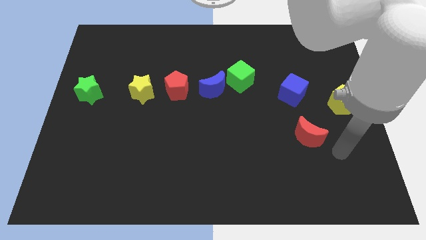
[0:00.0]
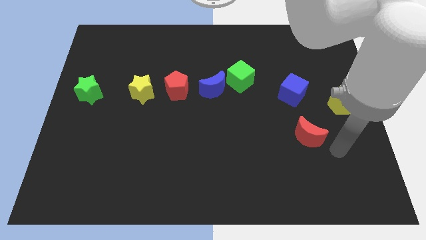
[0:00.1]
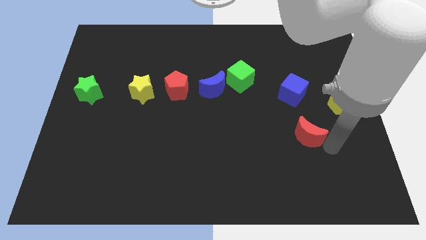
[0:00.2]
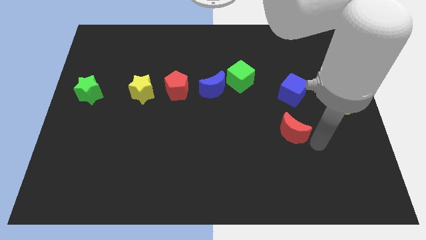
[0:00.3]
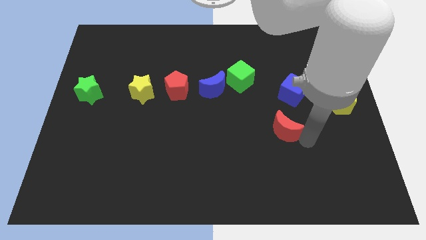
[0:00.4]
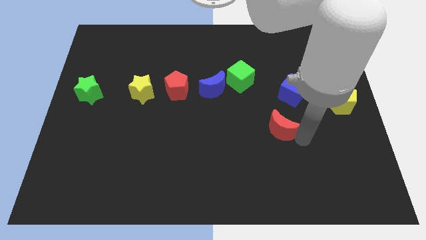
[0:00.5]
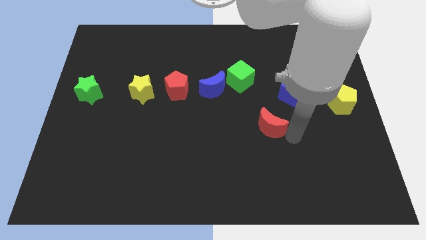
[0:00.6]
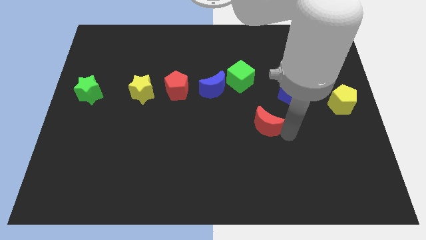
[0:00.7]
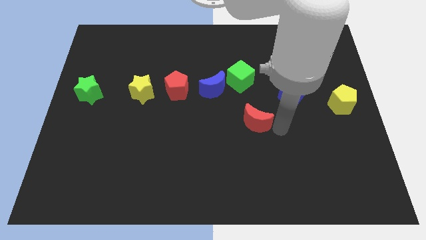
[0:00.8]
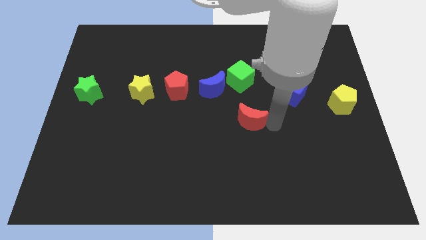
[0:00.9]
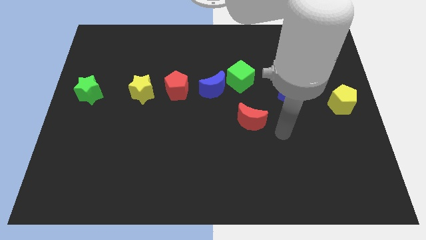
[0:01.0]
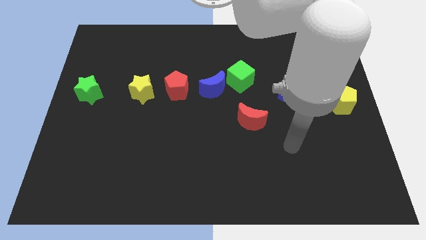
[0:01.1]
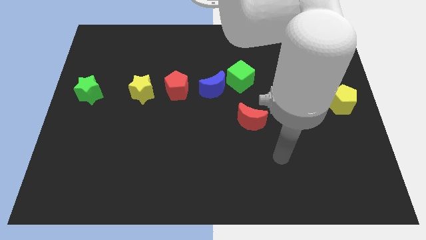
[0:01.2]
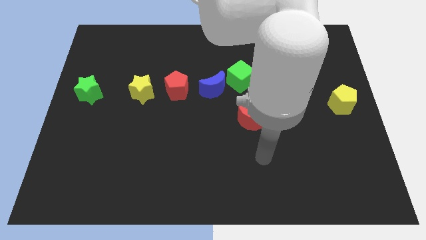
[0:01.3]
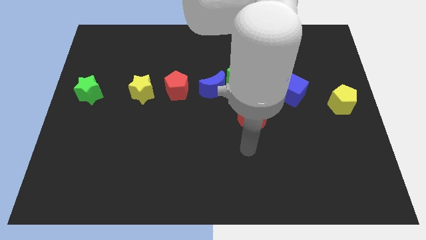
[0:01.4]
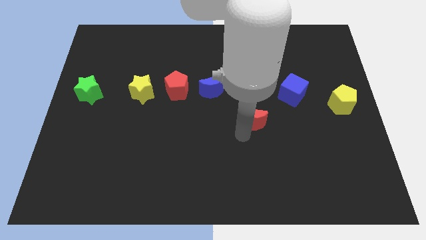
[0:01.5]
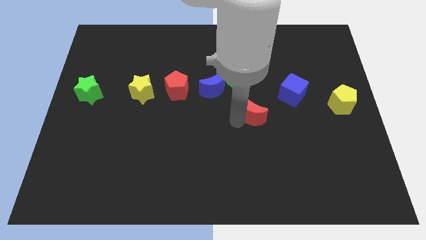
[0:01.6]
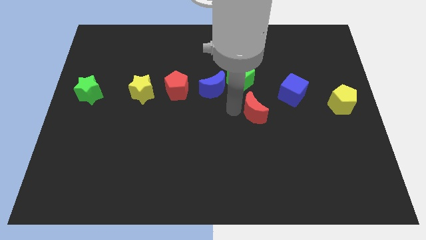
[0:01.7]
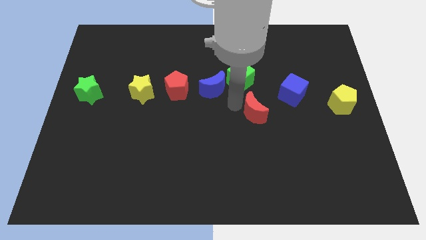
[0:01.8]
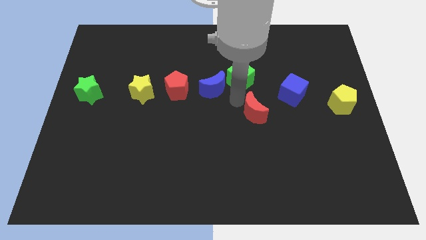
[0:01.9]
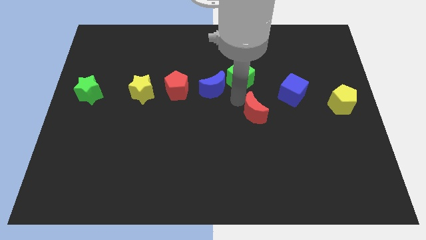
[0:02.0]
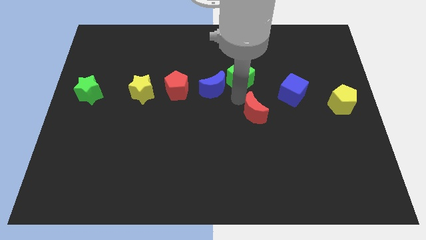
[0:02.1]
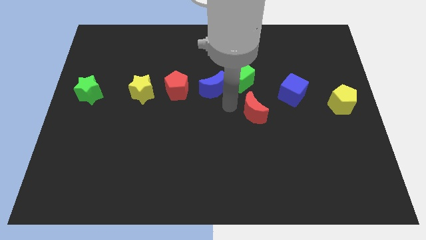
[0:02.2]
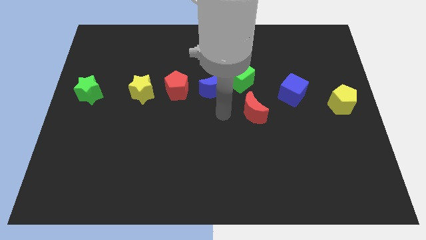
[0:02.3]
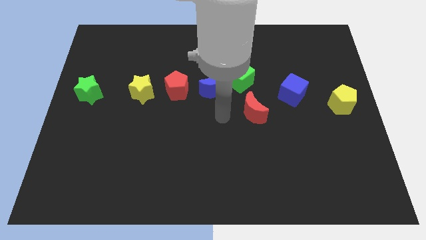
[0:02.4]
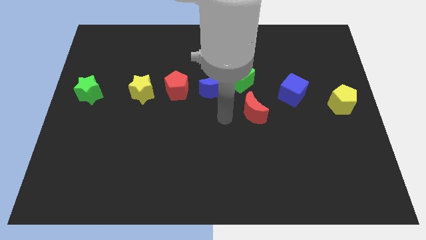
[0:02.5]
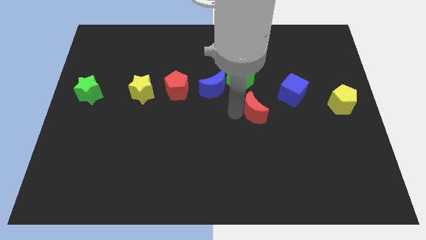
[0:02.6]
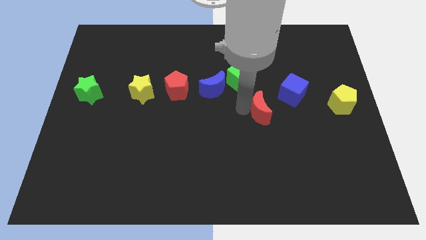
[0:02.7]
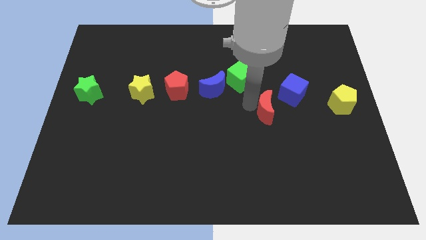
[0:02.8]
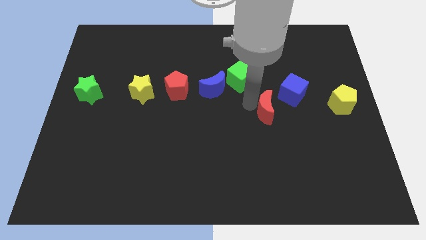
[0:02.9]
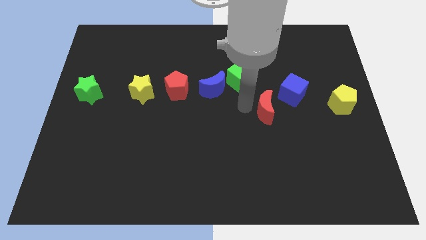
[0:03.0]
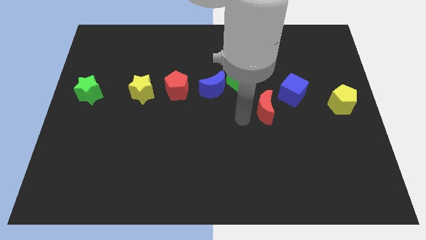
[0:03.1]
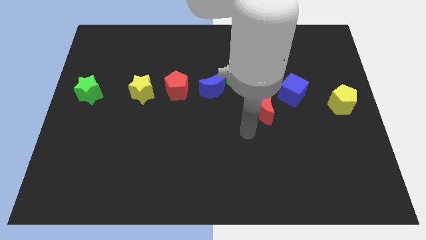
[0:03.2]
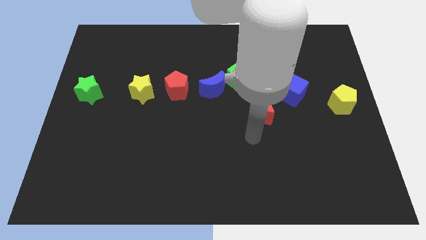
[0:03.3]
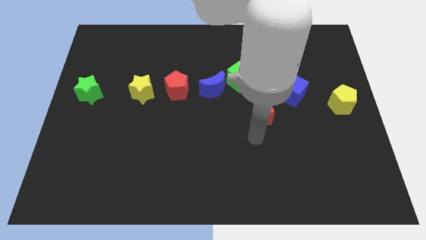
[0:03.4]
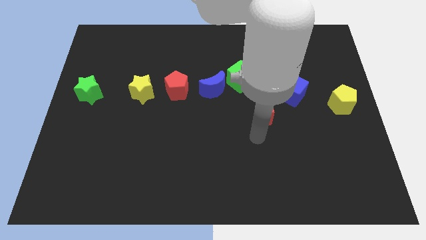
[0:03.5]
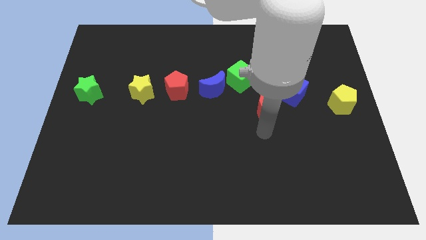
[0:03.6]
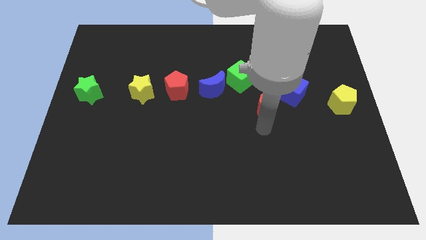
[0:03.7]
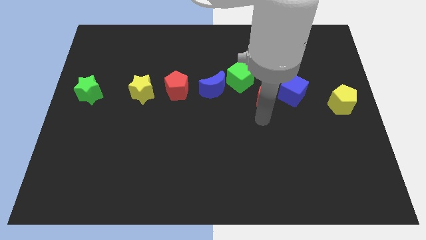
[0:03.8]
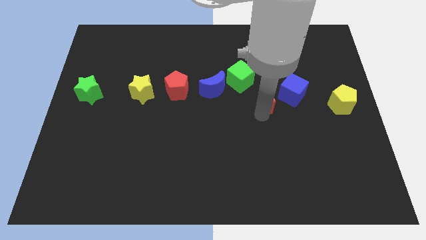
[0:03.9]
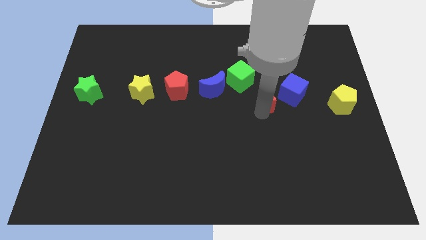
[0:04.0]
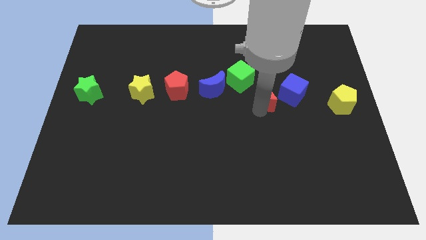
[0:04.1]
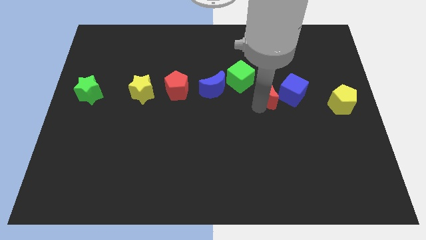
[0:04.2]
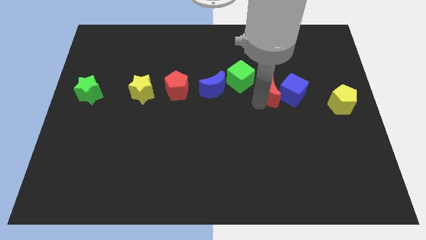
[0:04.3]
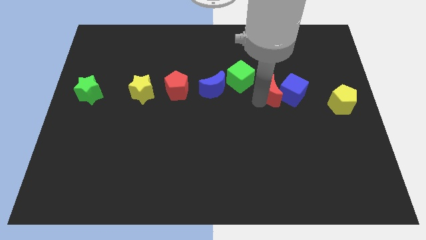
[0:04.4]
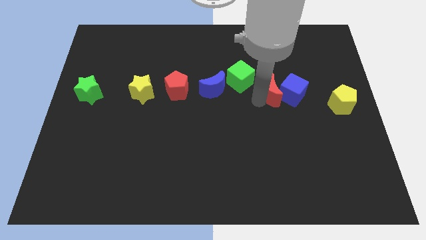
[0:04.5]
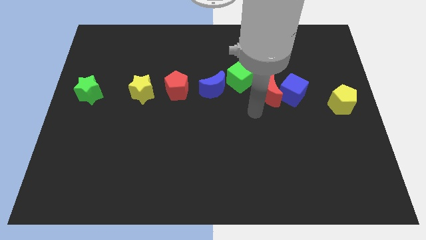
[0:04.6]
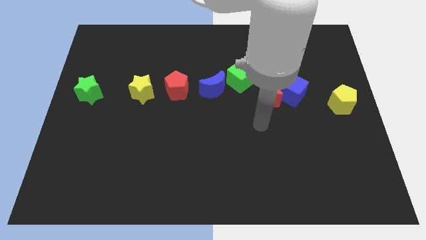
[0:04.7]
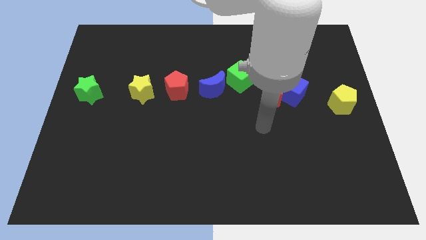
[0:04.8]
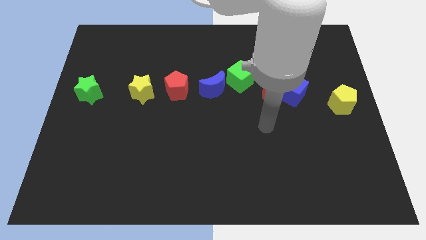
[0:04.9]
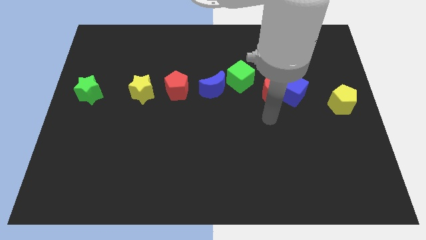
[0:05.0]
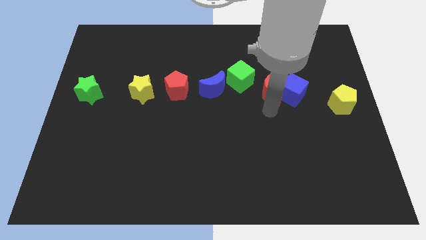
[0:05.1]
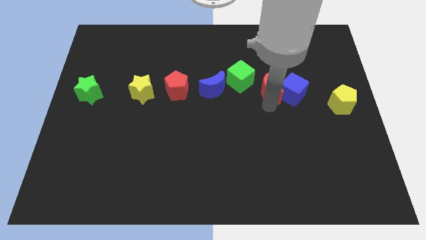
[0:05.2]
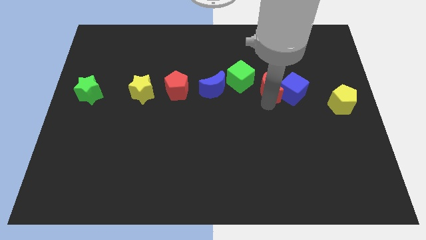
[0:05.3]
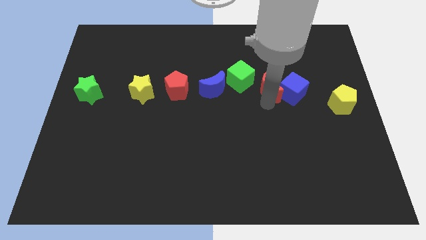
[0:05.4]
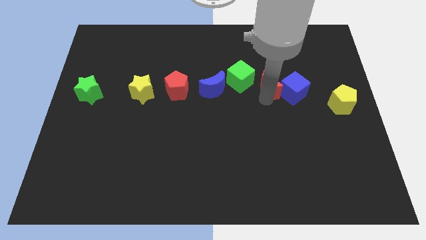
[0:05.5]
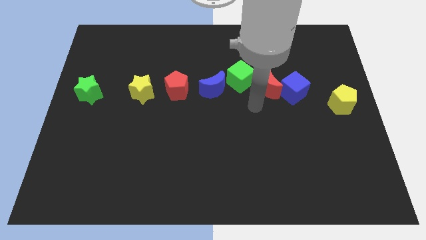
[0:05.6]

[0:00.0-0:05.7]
push the red crescent into the blue cube

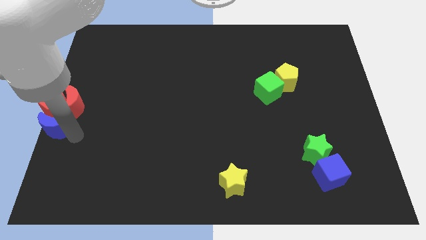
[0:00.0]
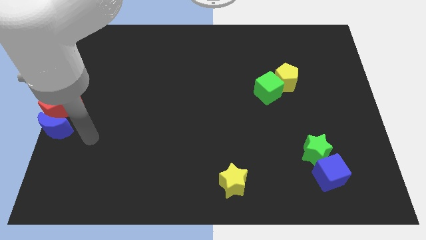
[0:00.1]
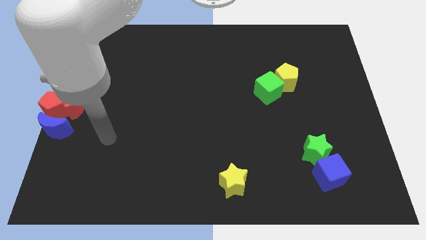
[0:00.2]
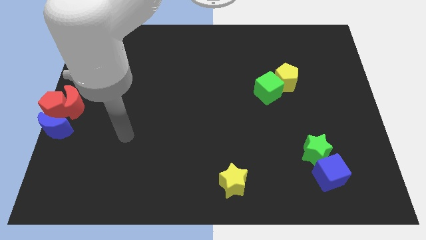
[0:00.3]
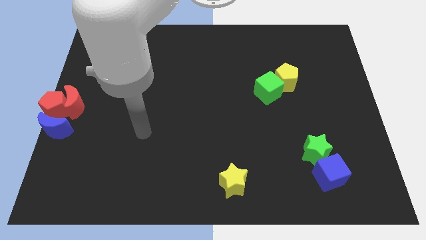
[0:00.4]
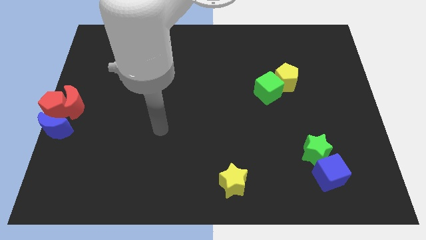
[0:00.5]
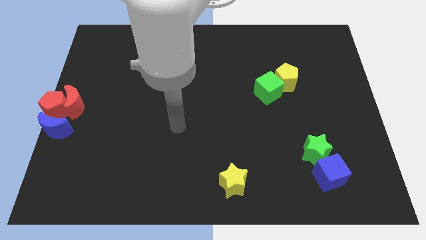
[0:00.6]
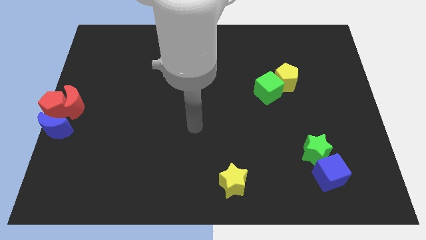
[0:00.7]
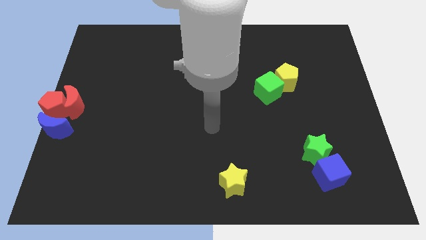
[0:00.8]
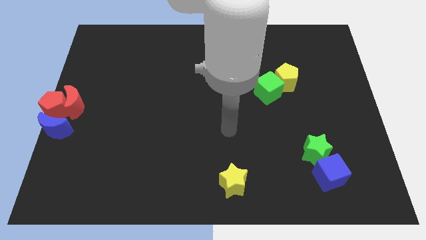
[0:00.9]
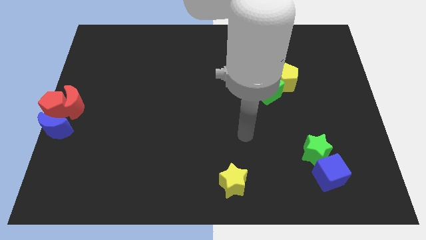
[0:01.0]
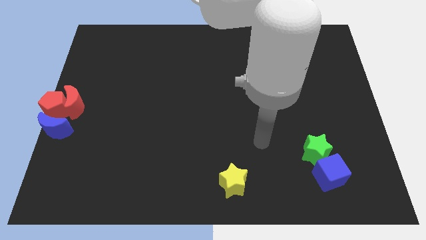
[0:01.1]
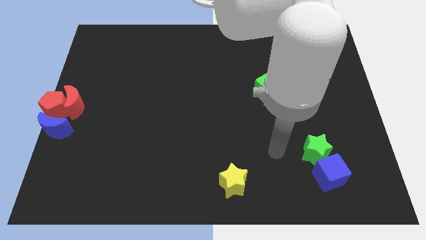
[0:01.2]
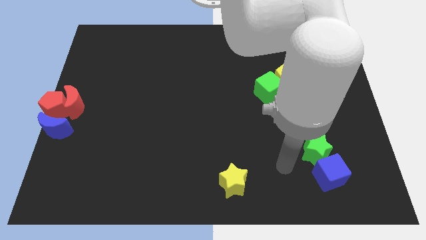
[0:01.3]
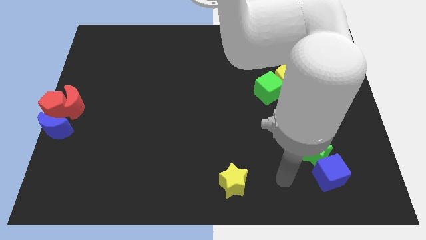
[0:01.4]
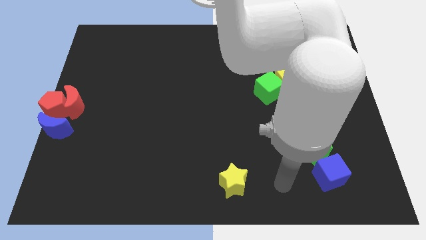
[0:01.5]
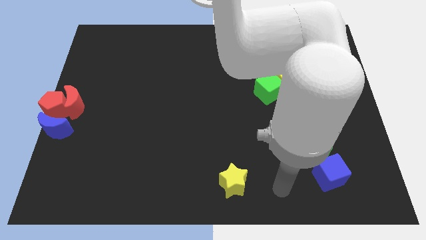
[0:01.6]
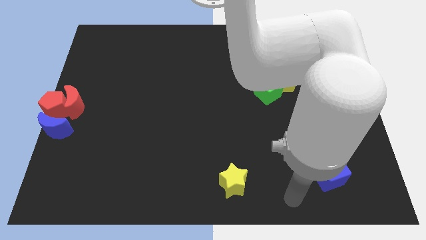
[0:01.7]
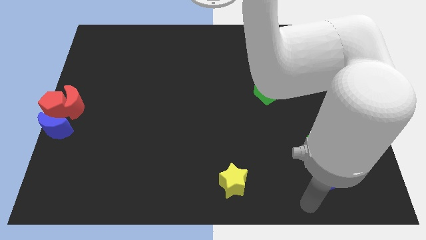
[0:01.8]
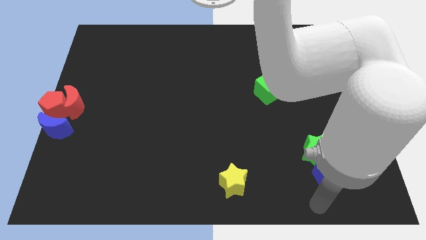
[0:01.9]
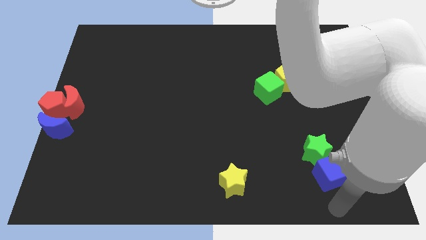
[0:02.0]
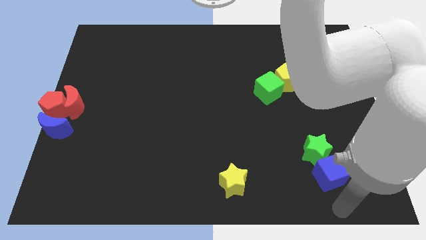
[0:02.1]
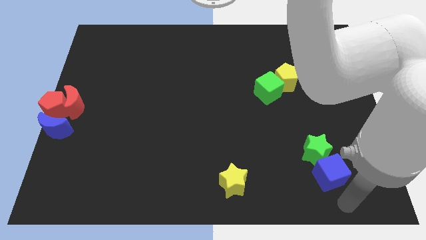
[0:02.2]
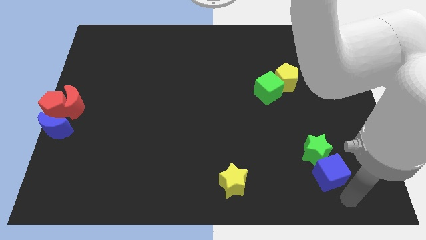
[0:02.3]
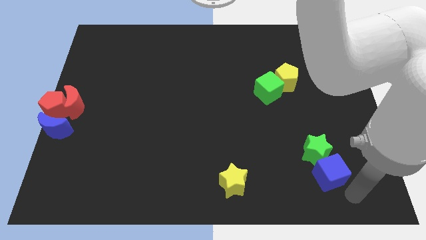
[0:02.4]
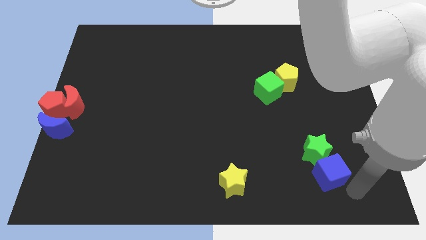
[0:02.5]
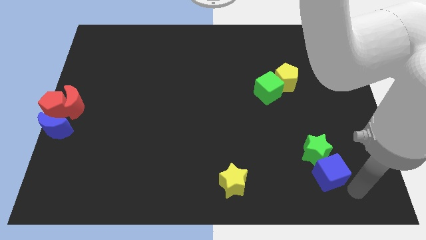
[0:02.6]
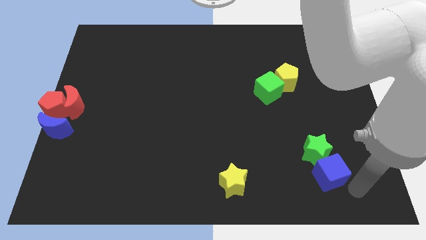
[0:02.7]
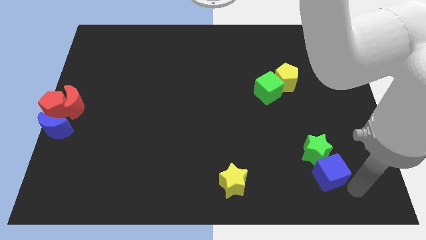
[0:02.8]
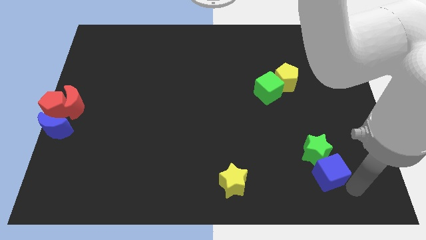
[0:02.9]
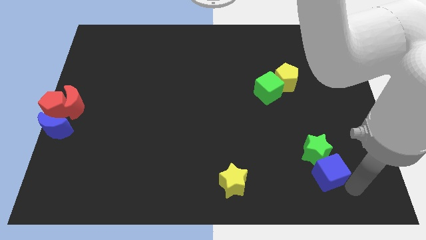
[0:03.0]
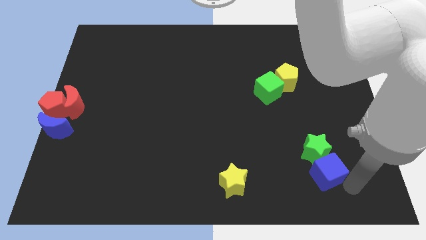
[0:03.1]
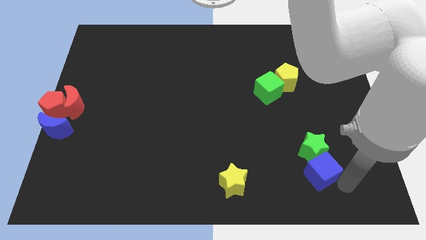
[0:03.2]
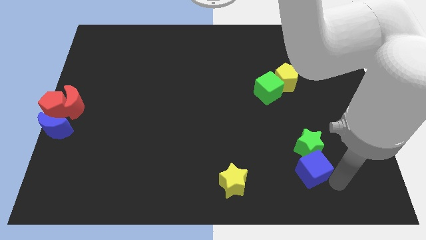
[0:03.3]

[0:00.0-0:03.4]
move your arm towards the blue cube
